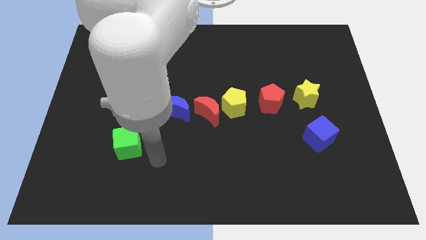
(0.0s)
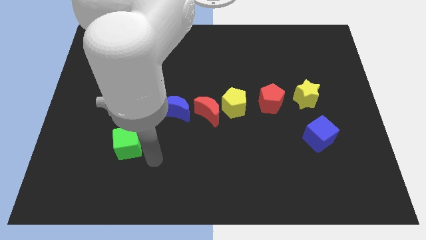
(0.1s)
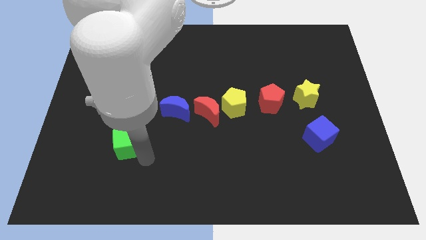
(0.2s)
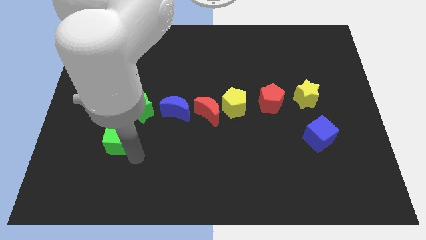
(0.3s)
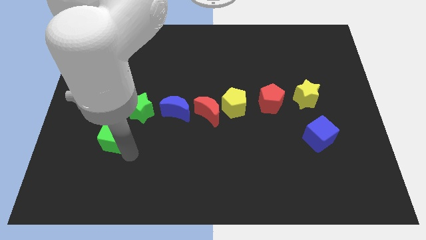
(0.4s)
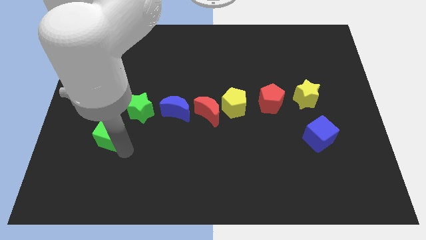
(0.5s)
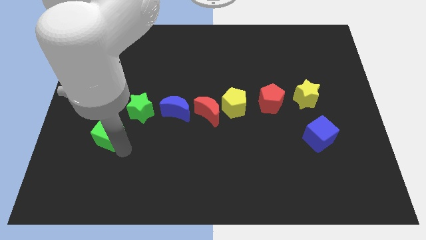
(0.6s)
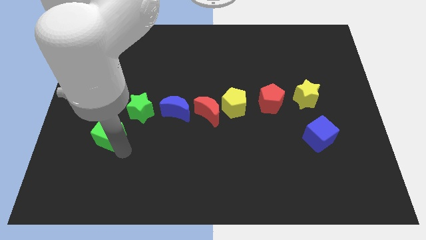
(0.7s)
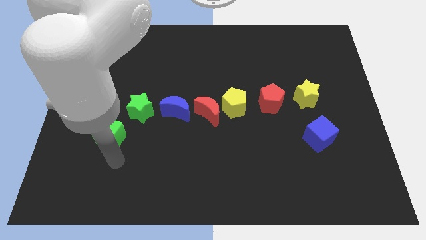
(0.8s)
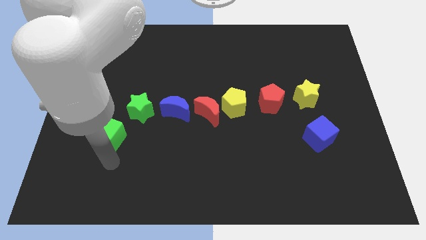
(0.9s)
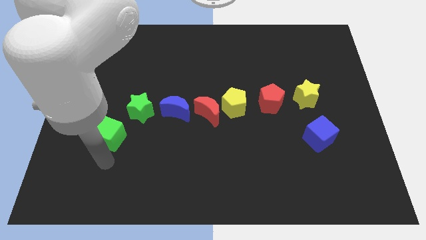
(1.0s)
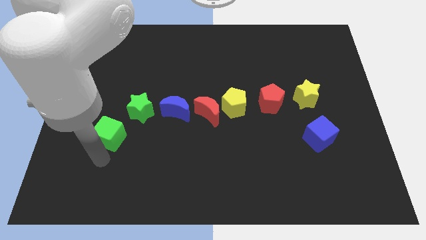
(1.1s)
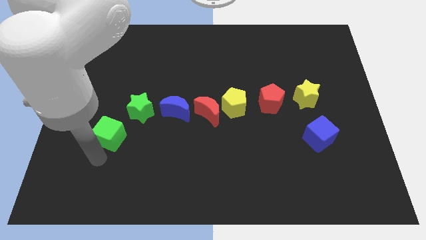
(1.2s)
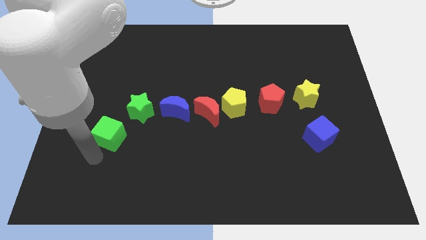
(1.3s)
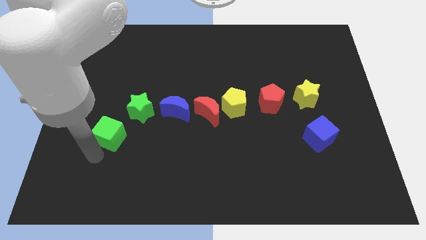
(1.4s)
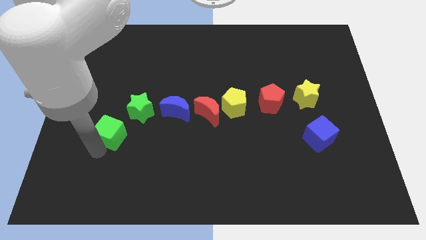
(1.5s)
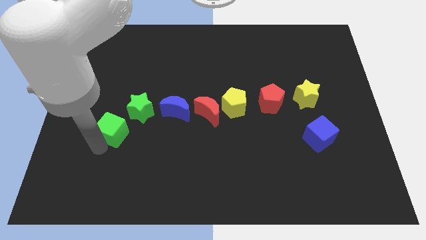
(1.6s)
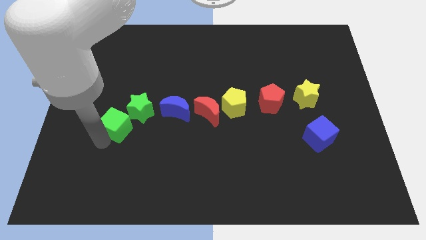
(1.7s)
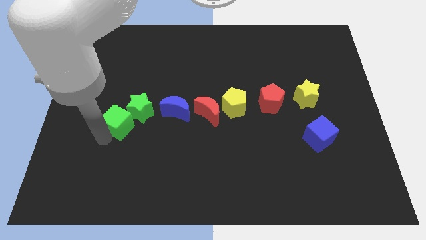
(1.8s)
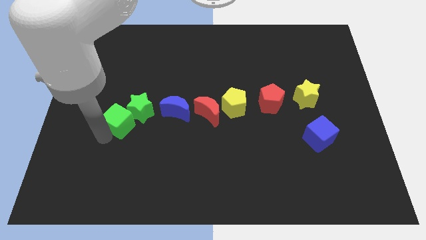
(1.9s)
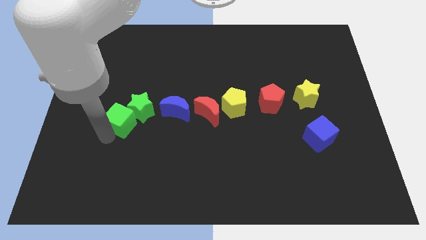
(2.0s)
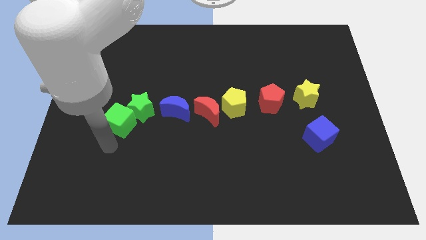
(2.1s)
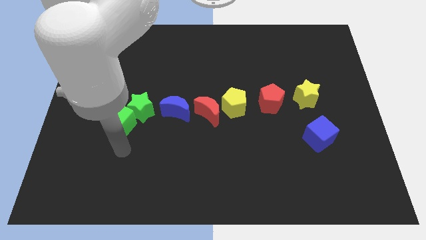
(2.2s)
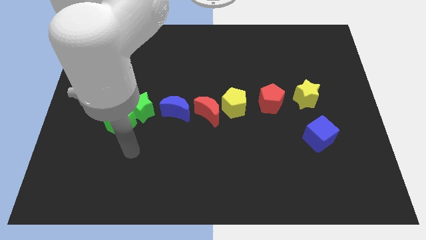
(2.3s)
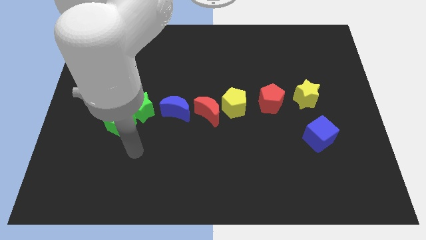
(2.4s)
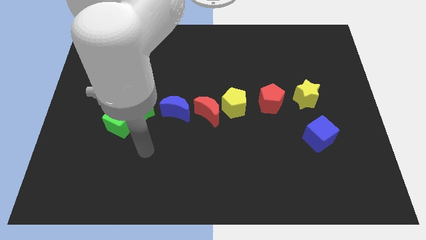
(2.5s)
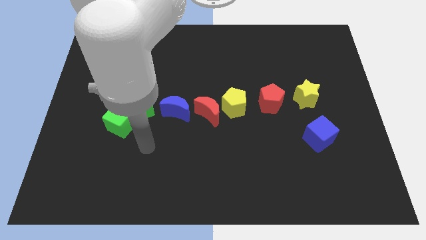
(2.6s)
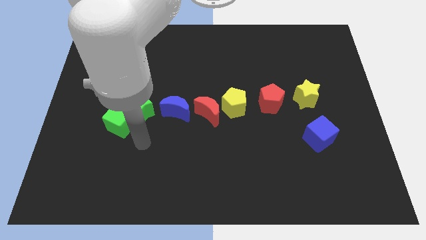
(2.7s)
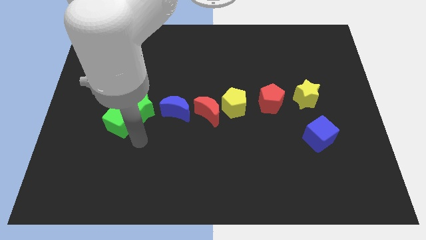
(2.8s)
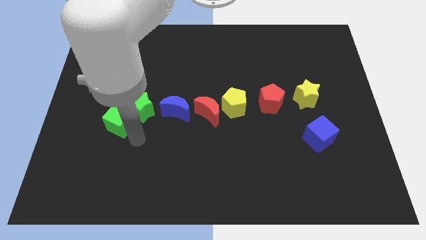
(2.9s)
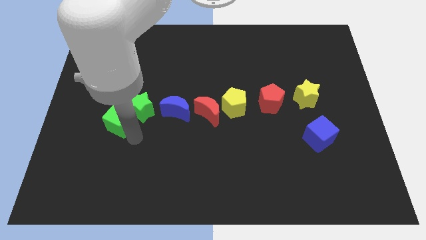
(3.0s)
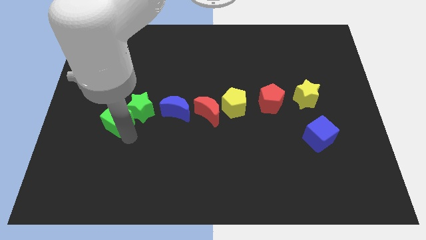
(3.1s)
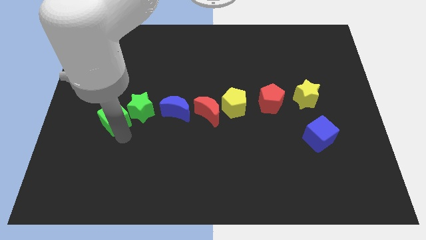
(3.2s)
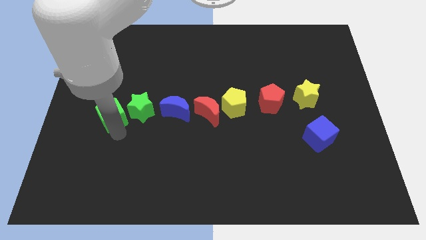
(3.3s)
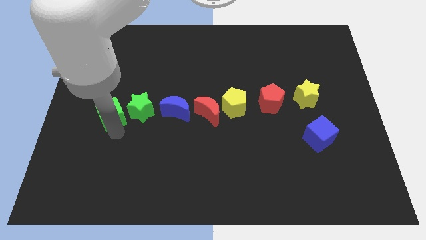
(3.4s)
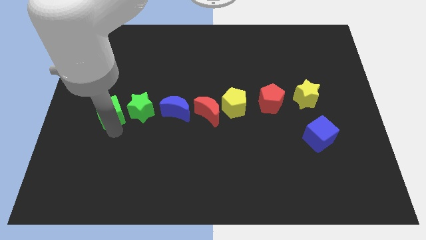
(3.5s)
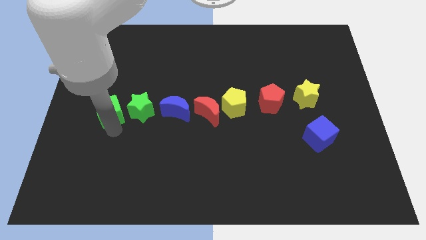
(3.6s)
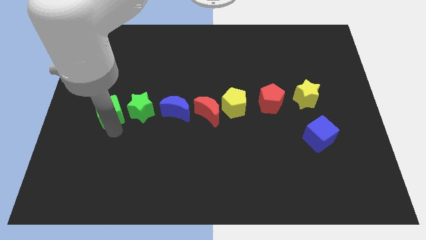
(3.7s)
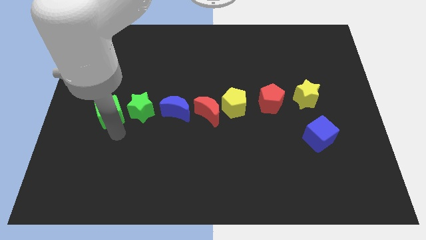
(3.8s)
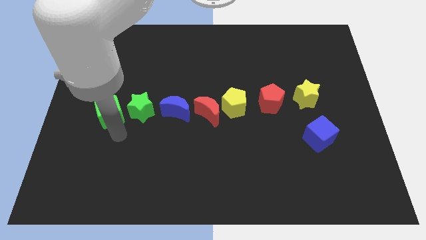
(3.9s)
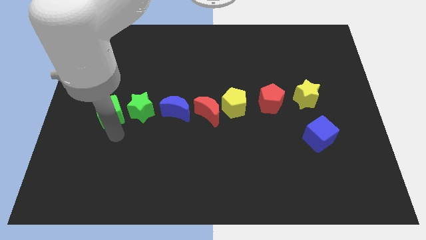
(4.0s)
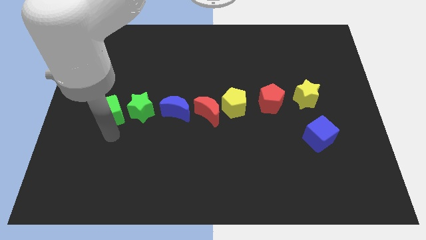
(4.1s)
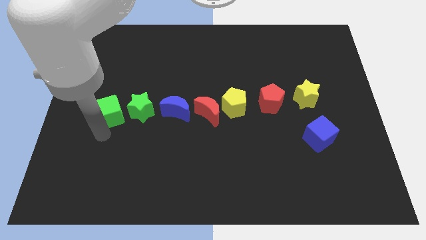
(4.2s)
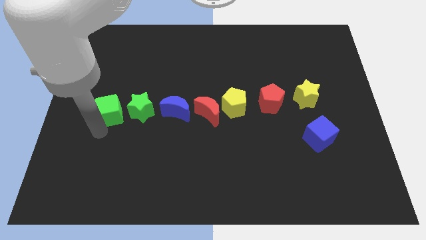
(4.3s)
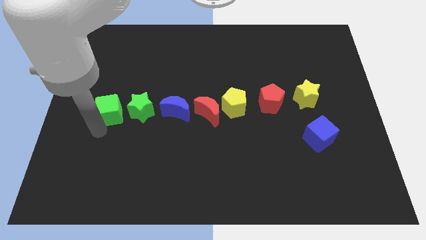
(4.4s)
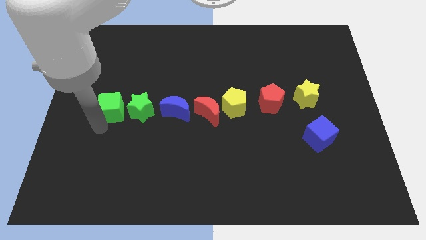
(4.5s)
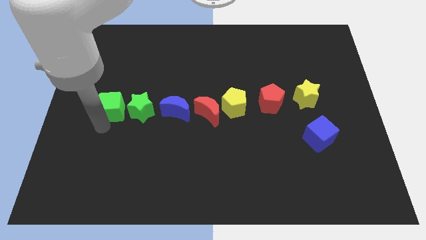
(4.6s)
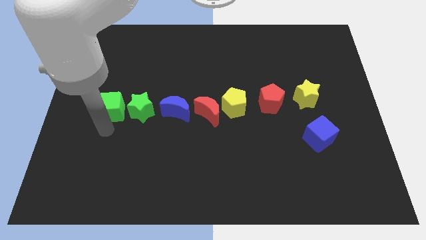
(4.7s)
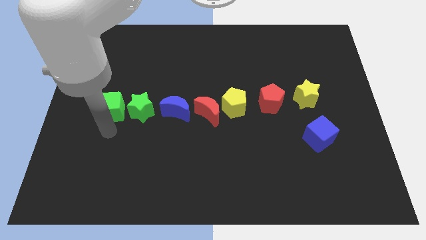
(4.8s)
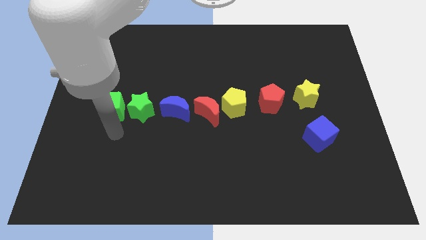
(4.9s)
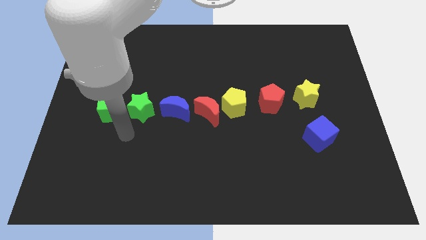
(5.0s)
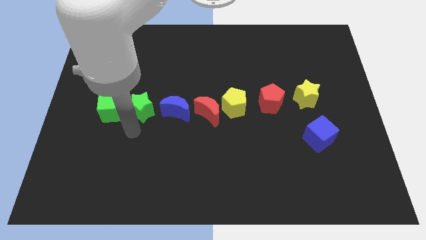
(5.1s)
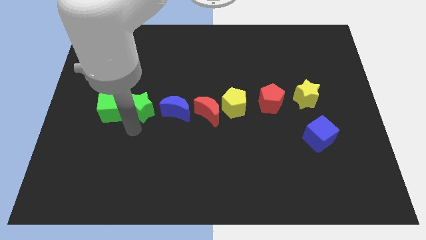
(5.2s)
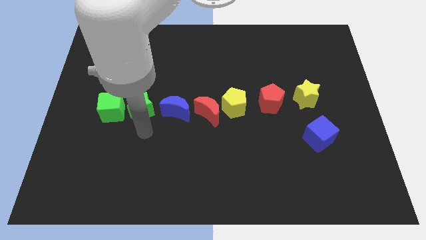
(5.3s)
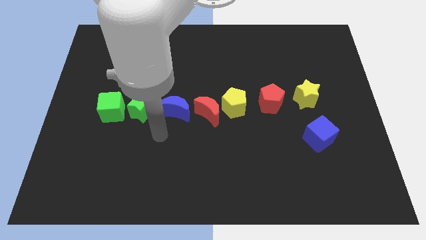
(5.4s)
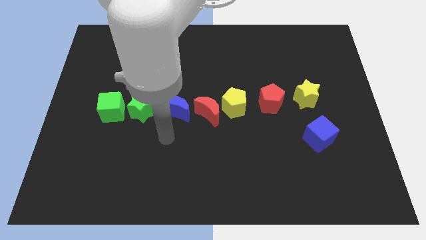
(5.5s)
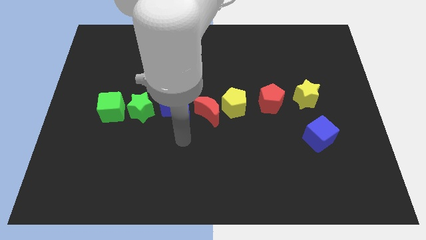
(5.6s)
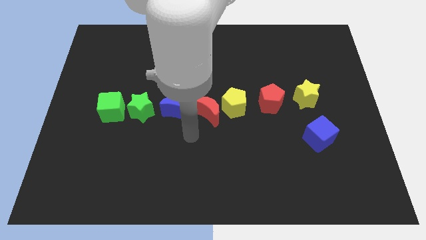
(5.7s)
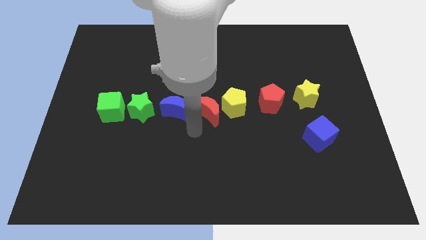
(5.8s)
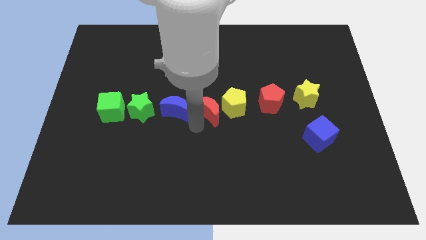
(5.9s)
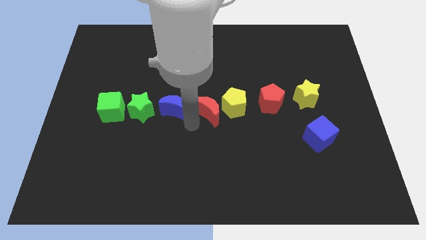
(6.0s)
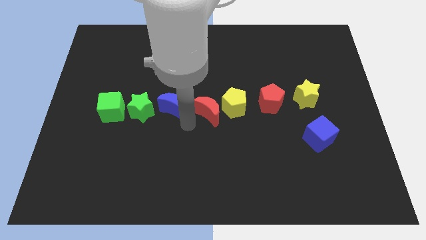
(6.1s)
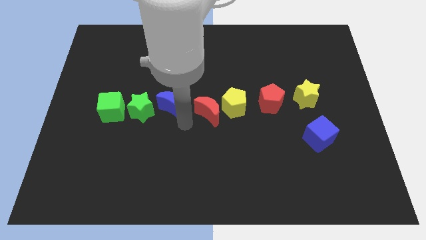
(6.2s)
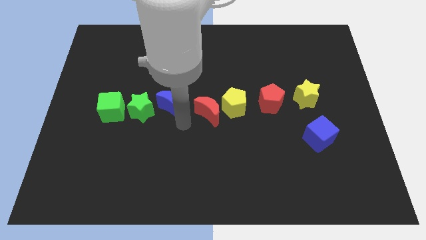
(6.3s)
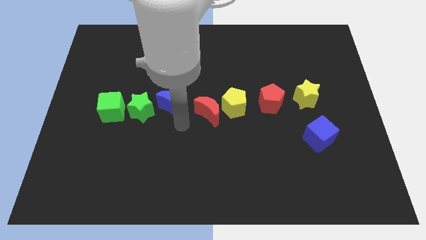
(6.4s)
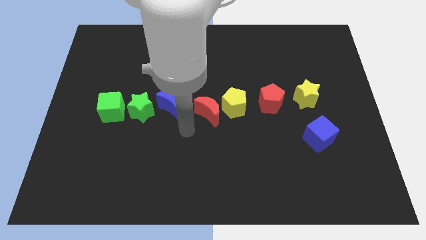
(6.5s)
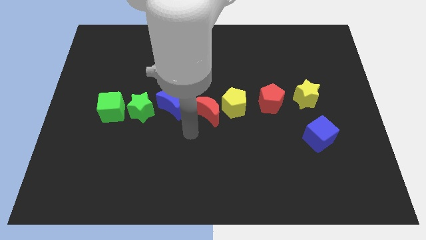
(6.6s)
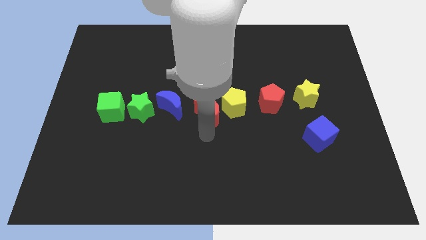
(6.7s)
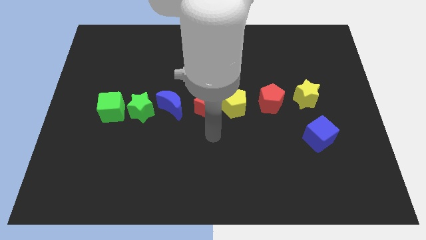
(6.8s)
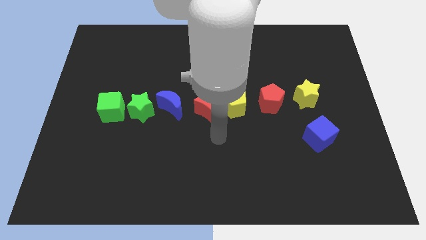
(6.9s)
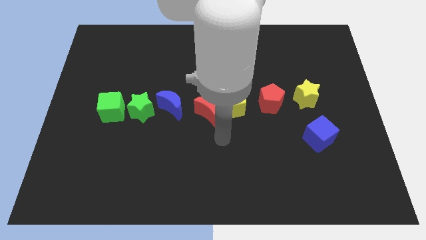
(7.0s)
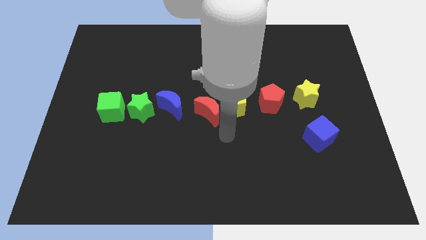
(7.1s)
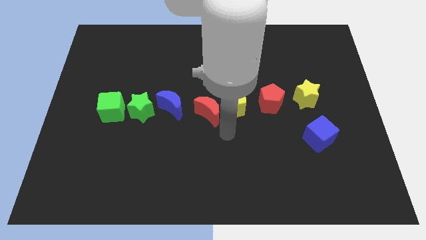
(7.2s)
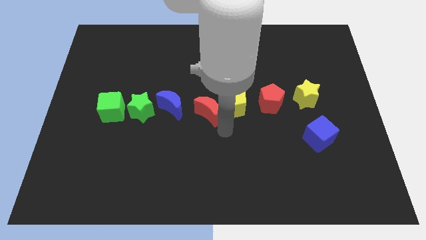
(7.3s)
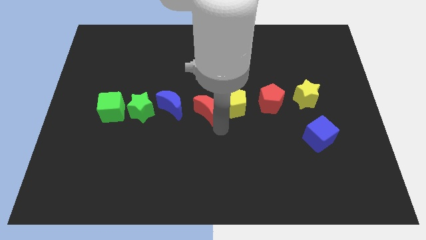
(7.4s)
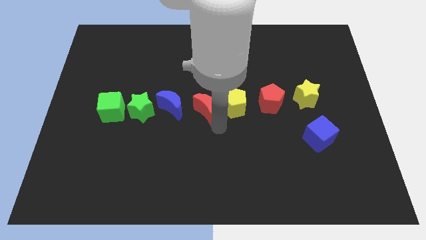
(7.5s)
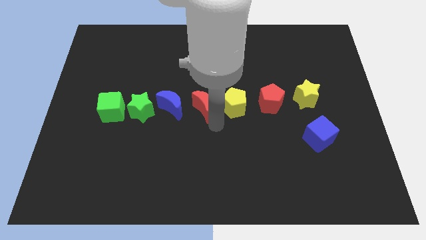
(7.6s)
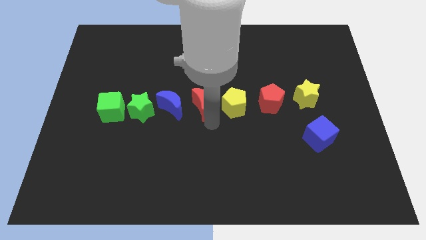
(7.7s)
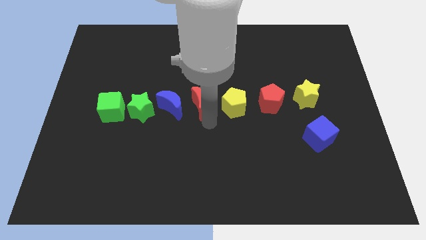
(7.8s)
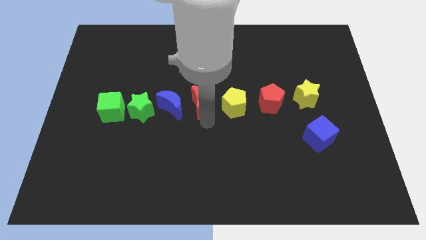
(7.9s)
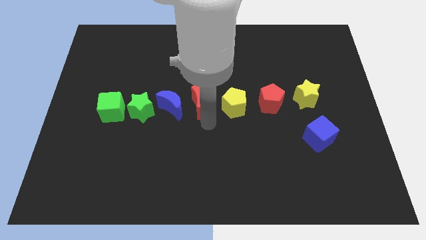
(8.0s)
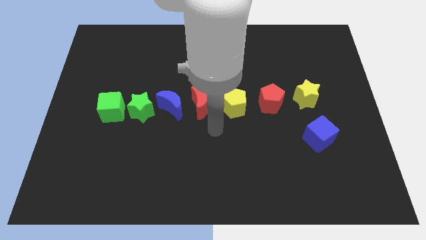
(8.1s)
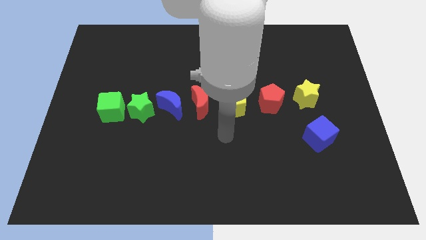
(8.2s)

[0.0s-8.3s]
place all the diagonally except the blue cube

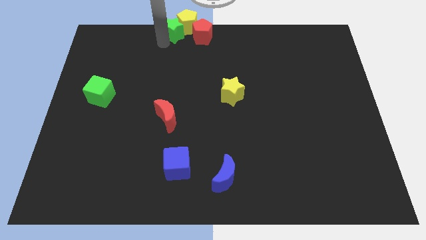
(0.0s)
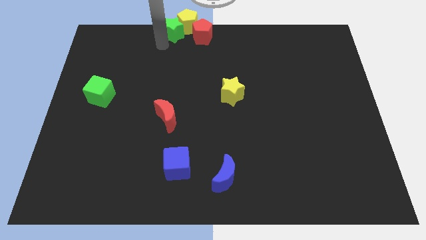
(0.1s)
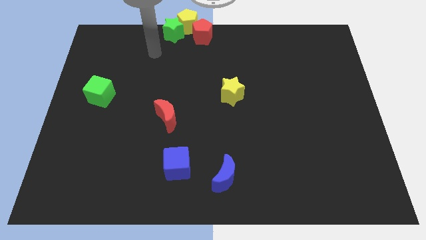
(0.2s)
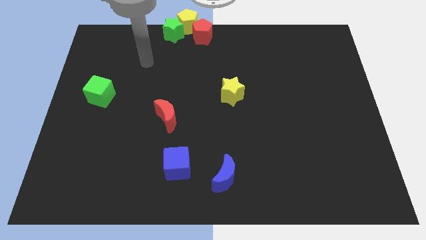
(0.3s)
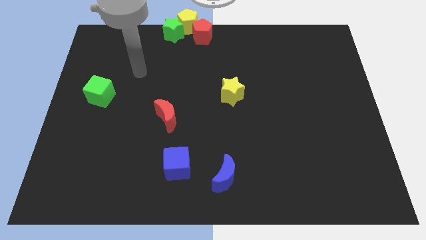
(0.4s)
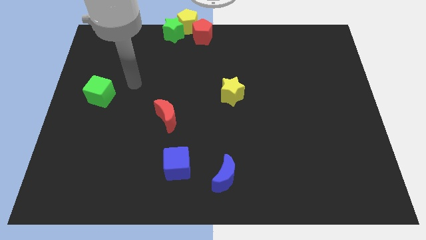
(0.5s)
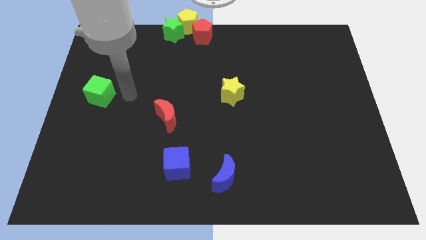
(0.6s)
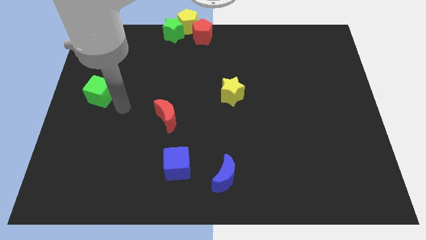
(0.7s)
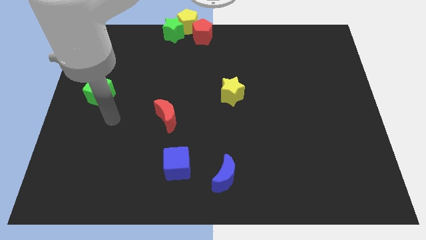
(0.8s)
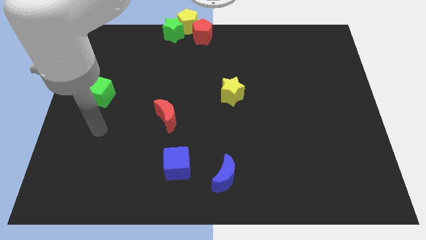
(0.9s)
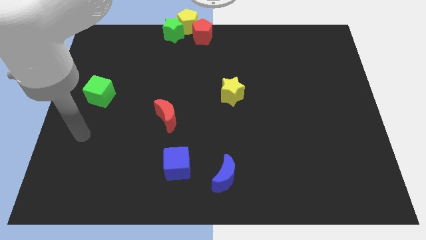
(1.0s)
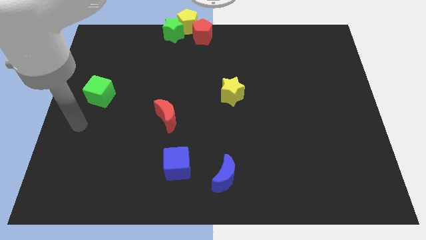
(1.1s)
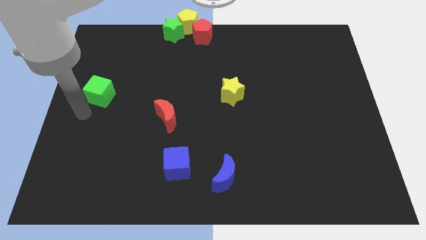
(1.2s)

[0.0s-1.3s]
point your arm at the bottom of the green cube
